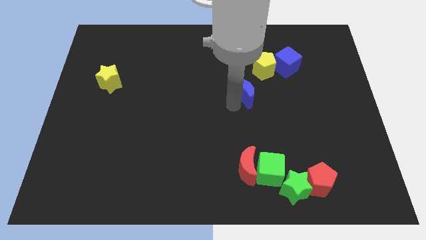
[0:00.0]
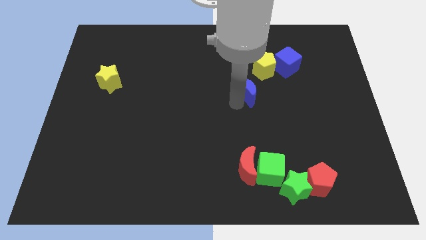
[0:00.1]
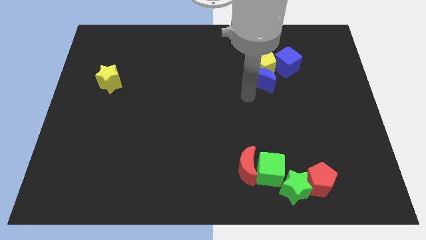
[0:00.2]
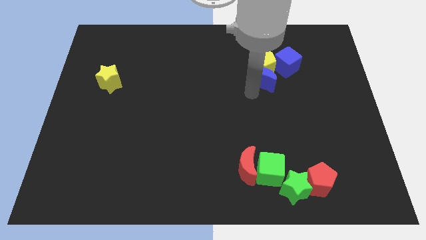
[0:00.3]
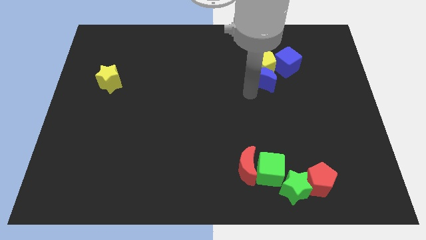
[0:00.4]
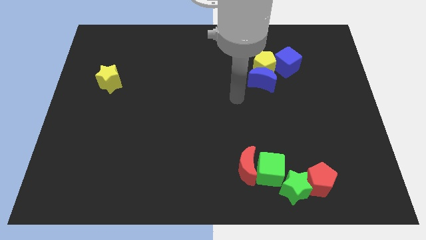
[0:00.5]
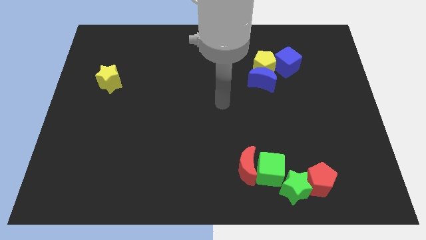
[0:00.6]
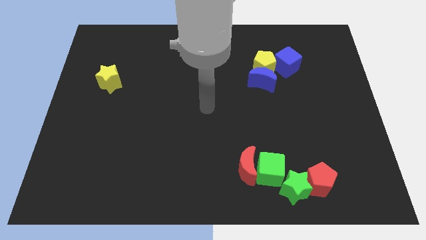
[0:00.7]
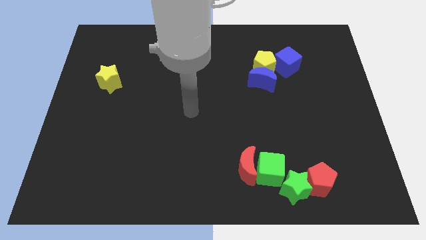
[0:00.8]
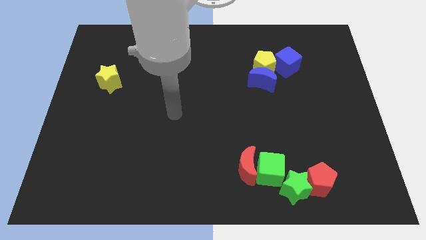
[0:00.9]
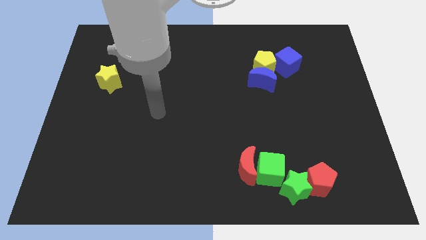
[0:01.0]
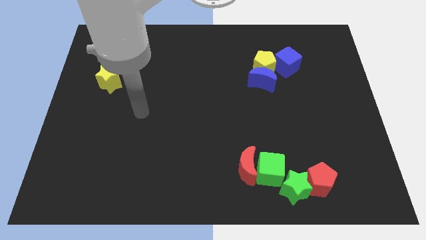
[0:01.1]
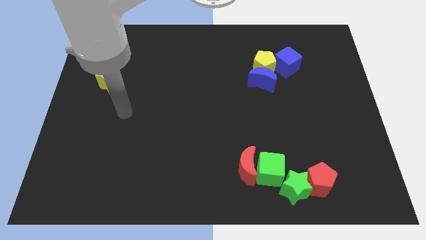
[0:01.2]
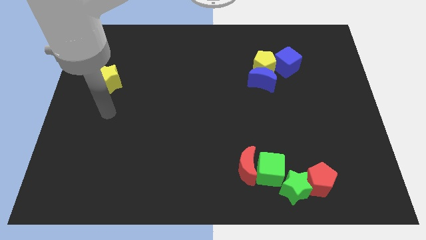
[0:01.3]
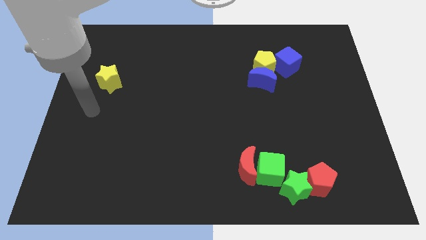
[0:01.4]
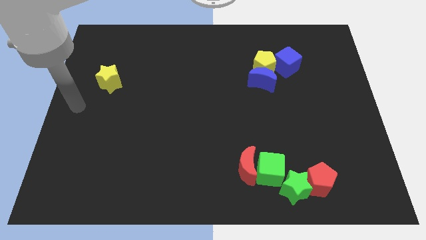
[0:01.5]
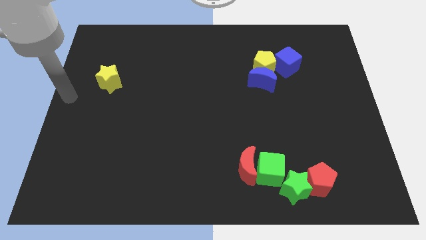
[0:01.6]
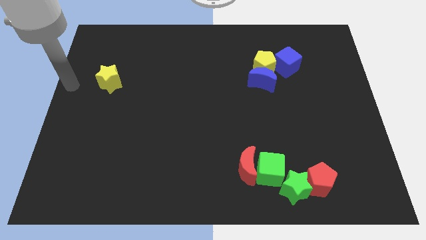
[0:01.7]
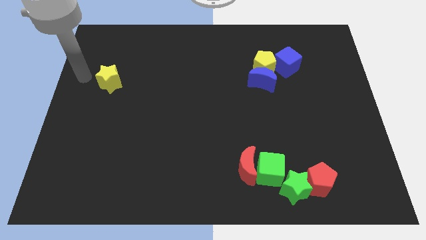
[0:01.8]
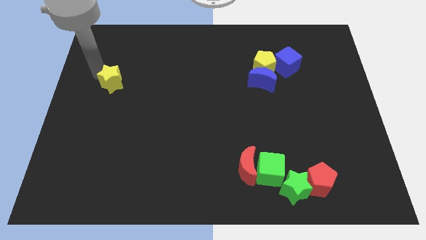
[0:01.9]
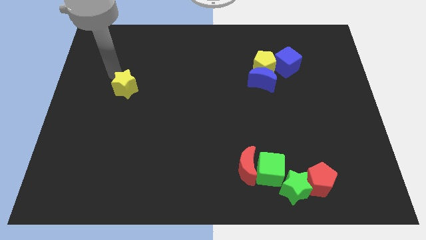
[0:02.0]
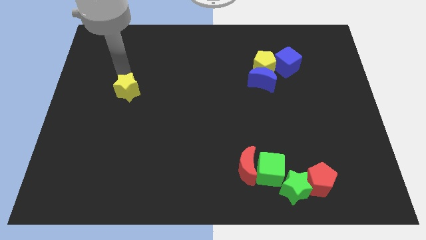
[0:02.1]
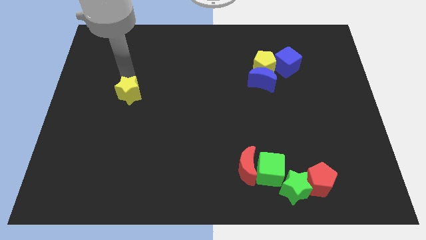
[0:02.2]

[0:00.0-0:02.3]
move the blue moon below the yellow pentagon

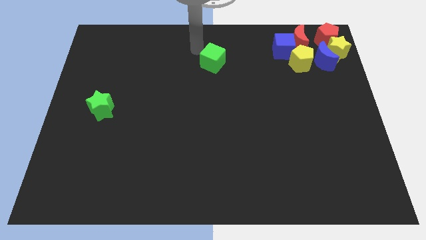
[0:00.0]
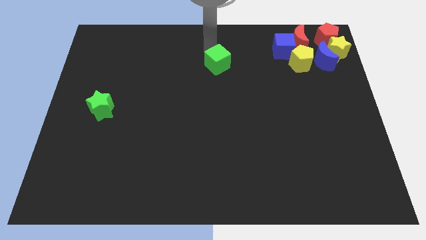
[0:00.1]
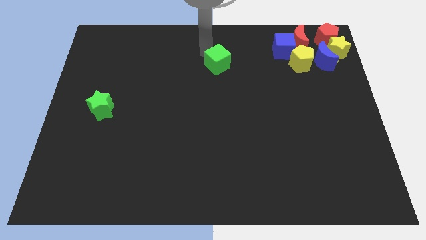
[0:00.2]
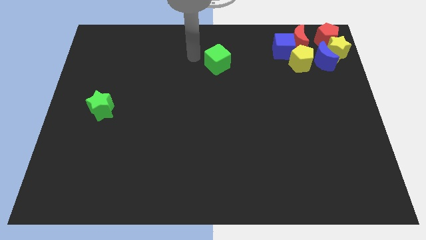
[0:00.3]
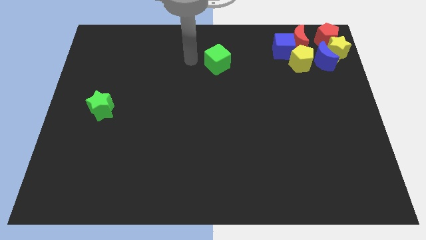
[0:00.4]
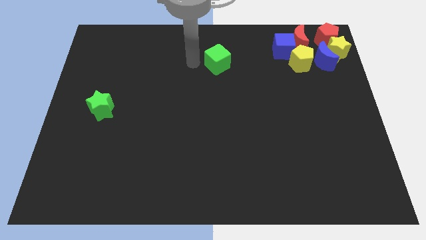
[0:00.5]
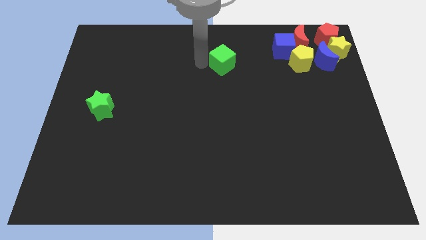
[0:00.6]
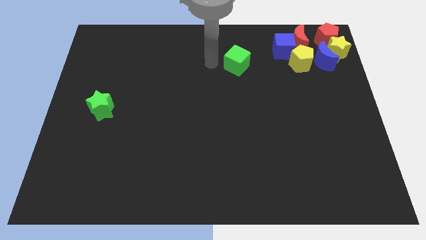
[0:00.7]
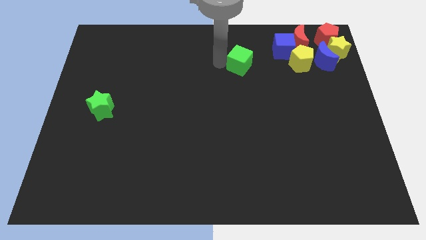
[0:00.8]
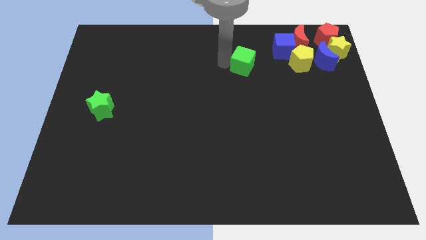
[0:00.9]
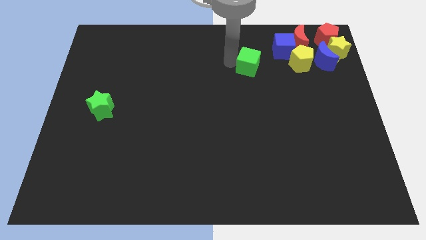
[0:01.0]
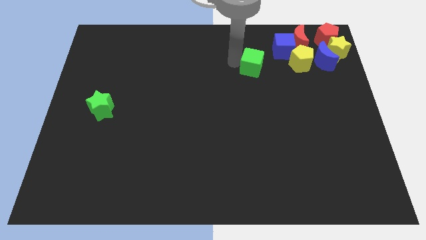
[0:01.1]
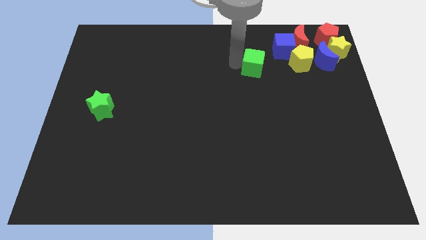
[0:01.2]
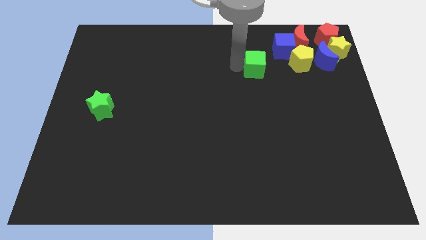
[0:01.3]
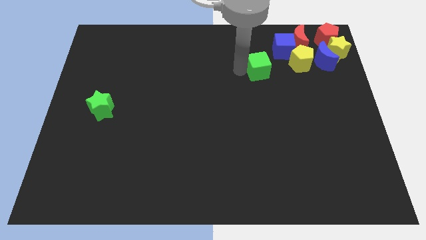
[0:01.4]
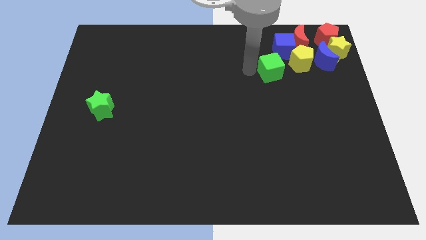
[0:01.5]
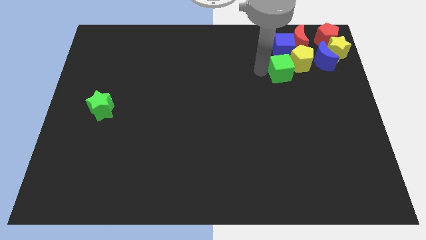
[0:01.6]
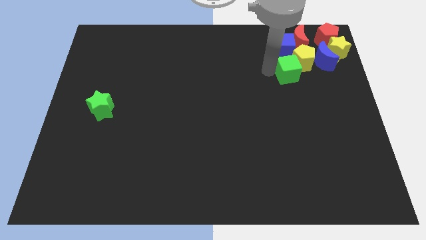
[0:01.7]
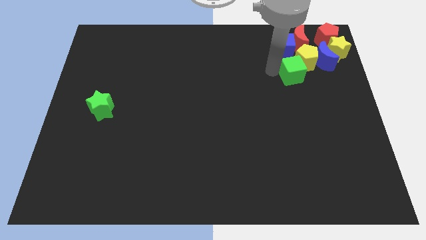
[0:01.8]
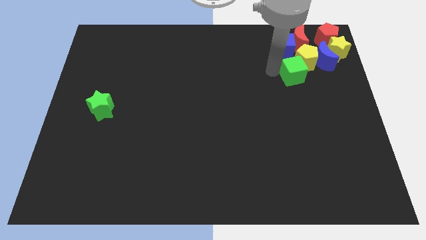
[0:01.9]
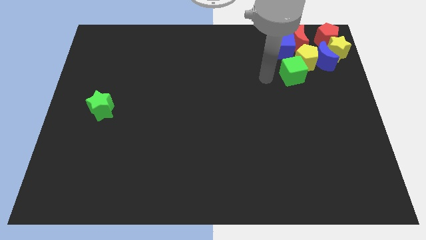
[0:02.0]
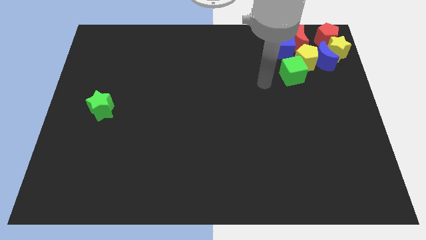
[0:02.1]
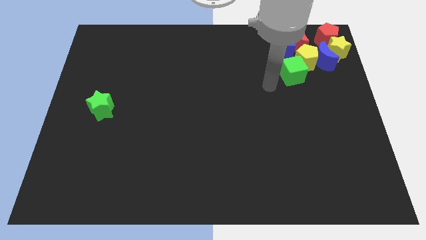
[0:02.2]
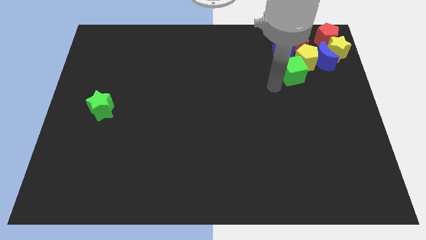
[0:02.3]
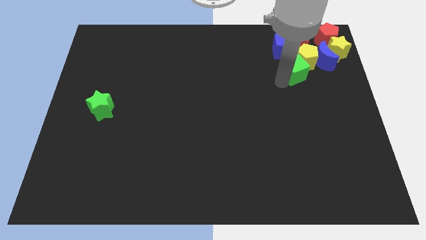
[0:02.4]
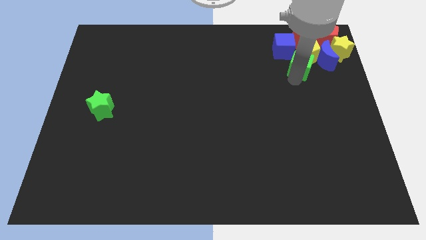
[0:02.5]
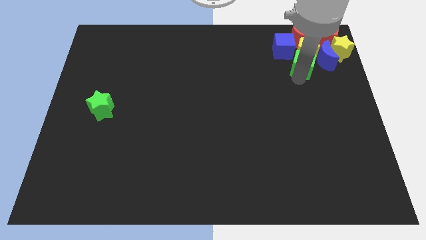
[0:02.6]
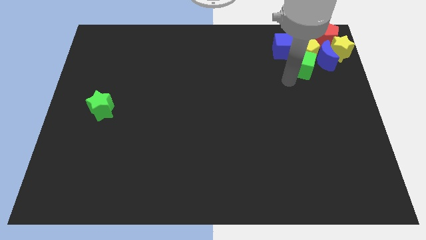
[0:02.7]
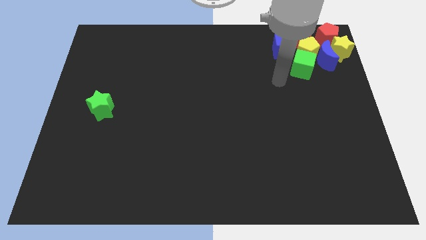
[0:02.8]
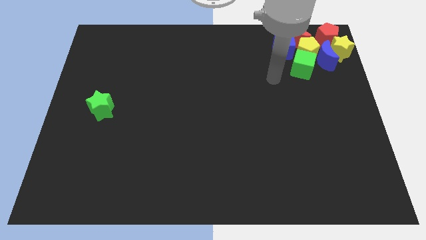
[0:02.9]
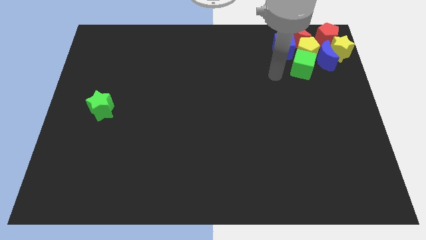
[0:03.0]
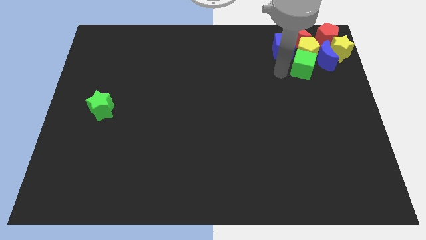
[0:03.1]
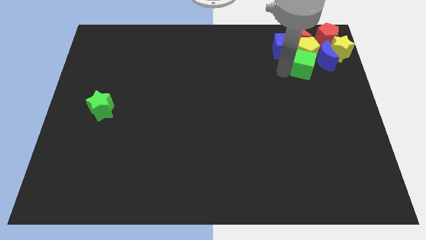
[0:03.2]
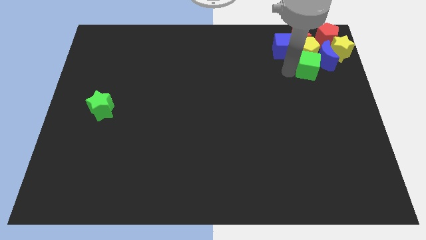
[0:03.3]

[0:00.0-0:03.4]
push the green cube into the yellow pentagon

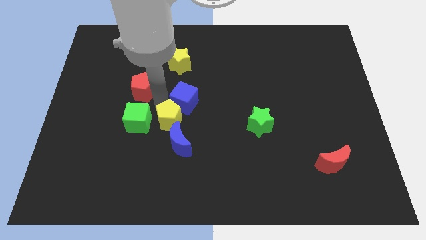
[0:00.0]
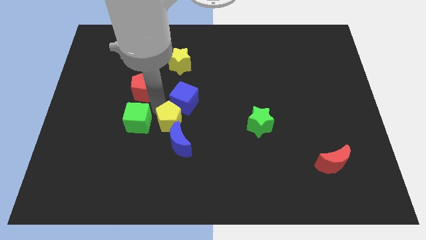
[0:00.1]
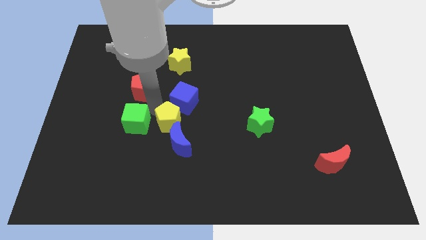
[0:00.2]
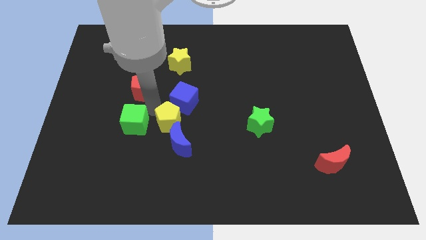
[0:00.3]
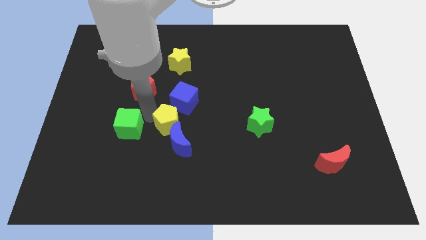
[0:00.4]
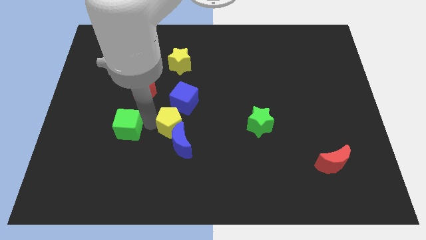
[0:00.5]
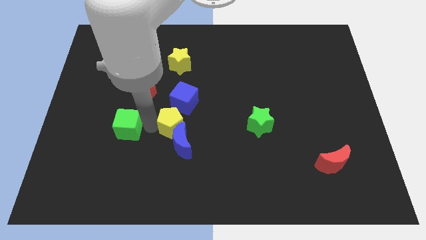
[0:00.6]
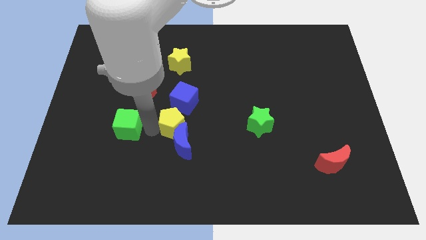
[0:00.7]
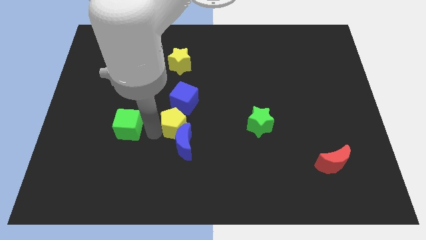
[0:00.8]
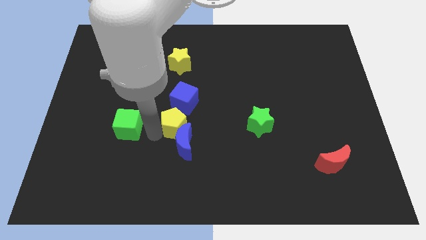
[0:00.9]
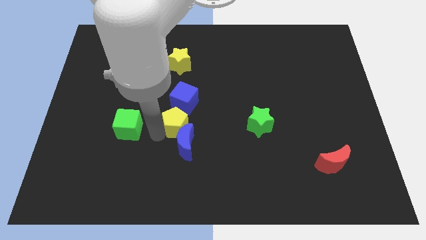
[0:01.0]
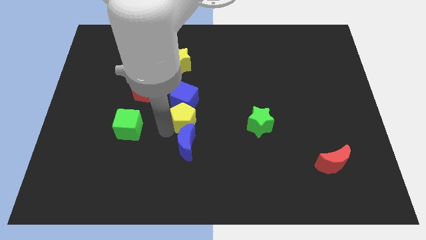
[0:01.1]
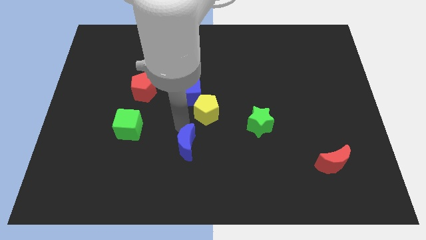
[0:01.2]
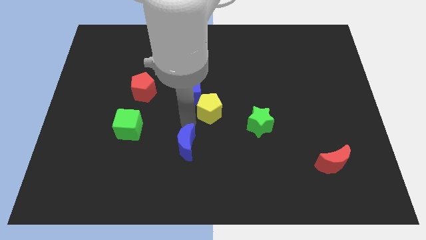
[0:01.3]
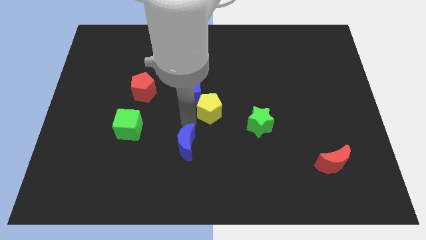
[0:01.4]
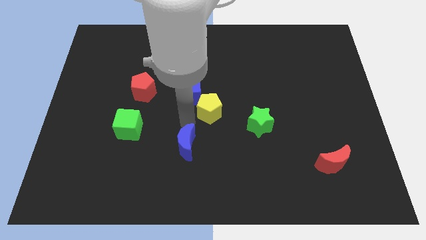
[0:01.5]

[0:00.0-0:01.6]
slide the yellow pentagon diagonally bottom right to the blue cube

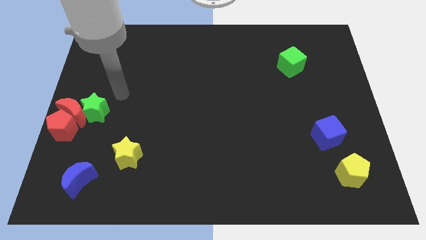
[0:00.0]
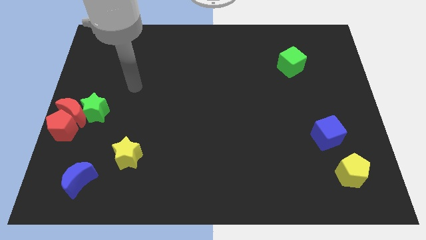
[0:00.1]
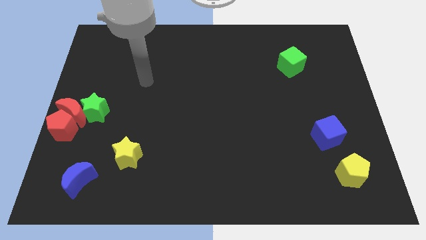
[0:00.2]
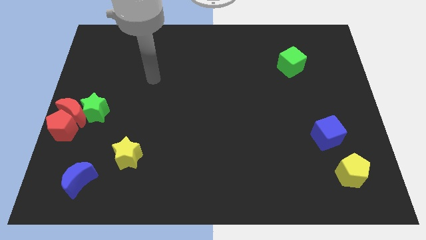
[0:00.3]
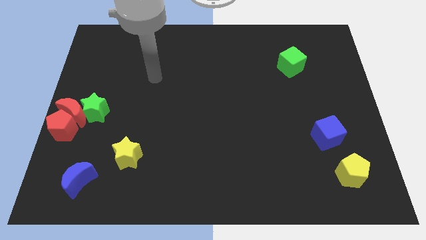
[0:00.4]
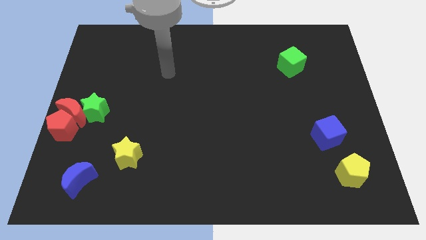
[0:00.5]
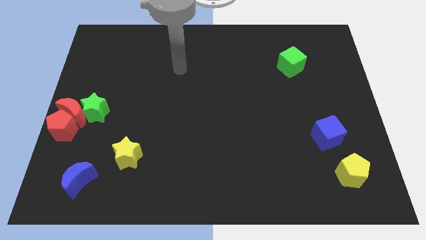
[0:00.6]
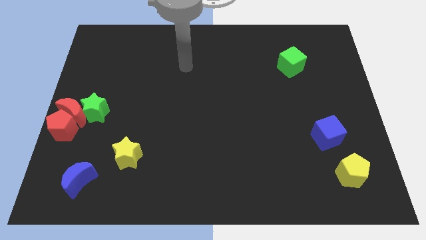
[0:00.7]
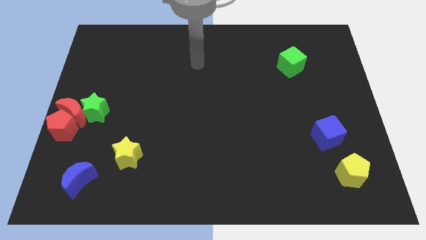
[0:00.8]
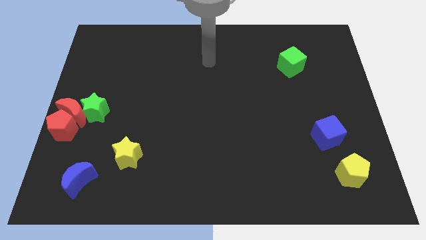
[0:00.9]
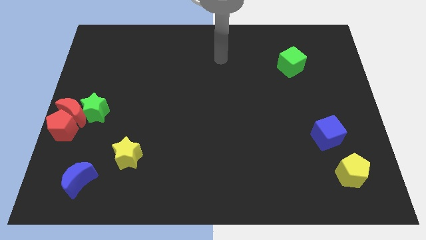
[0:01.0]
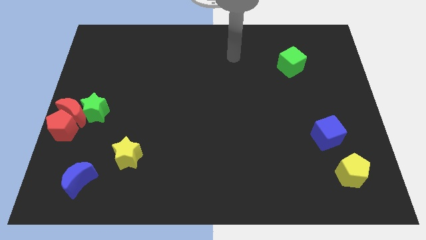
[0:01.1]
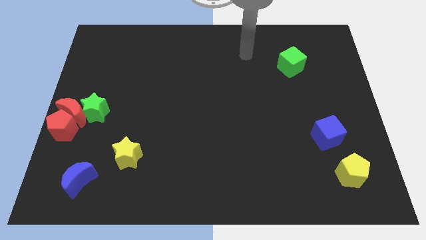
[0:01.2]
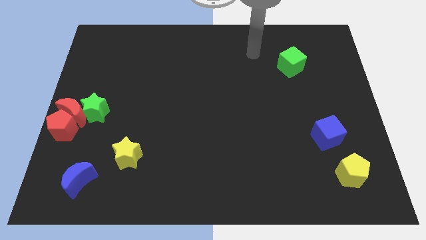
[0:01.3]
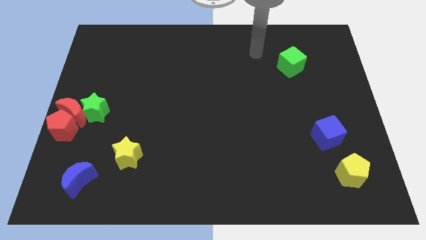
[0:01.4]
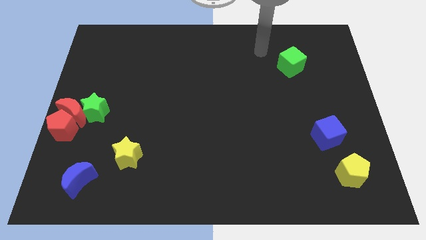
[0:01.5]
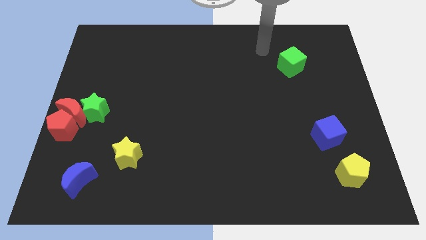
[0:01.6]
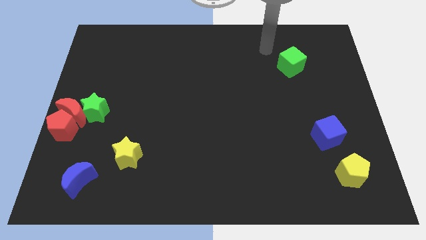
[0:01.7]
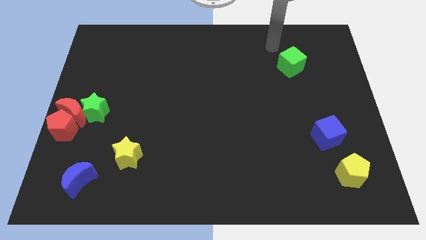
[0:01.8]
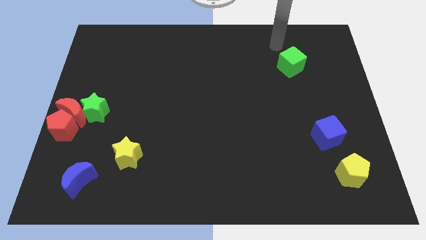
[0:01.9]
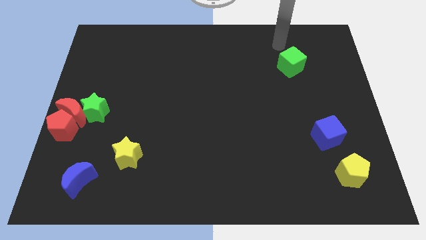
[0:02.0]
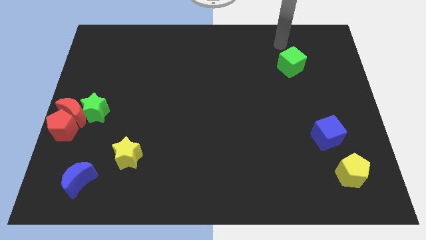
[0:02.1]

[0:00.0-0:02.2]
move robot arm towards green cube
